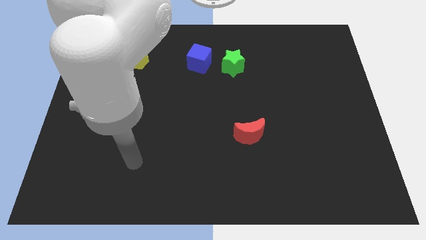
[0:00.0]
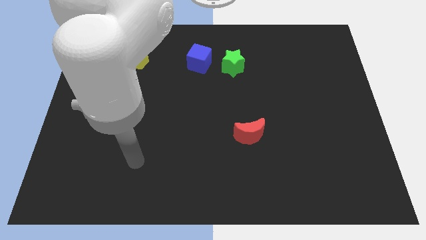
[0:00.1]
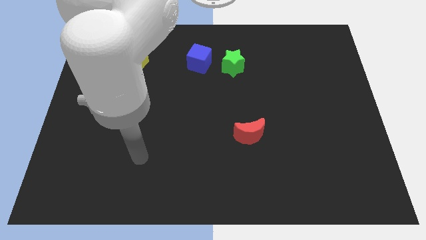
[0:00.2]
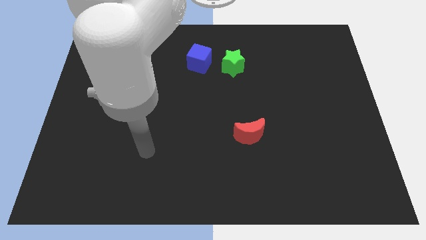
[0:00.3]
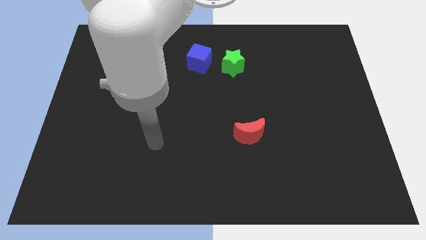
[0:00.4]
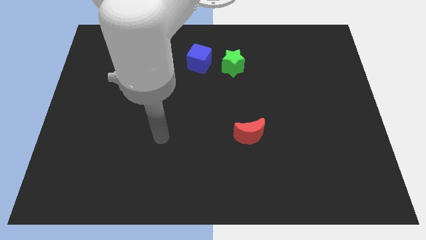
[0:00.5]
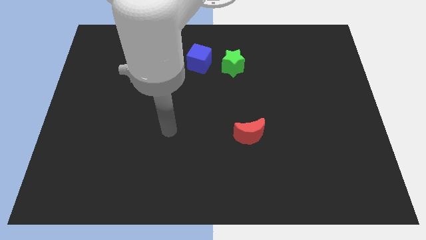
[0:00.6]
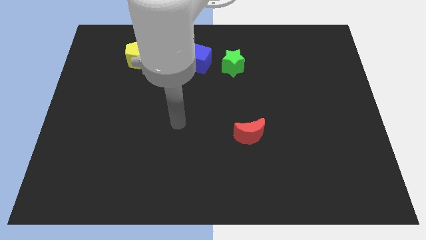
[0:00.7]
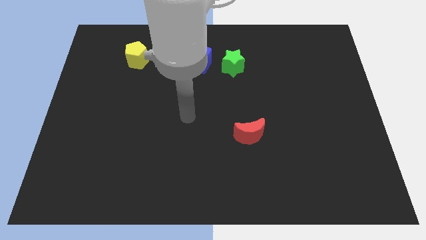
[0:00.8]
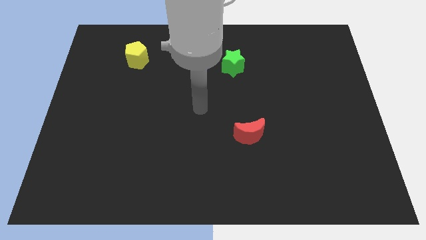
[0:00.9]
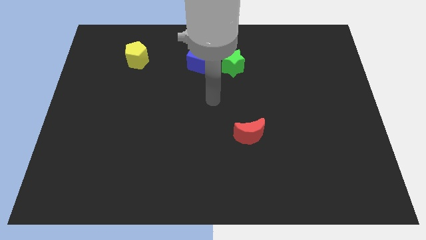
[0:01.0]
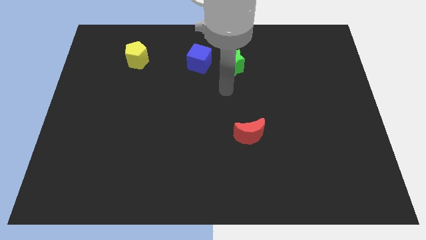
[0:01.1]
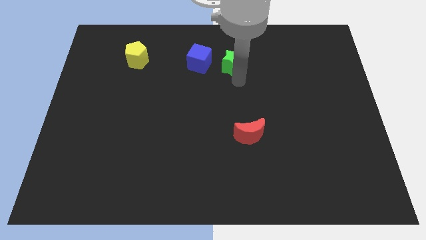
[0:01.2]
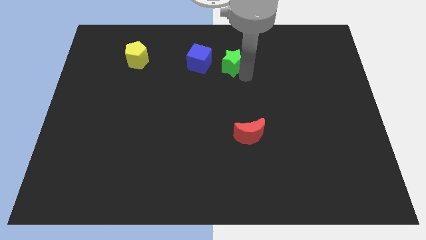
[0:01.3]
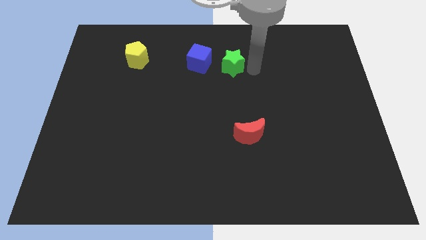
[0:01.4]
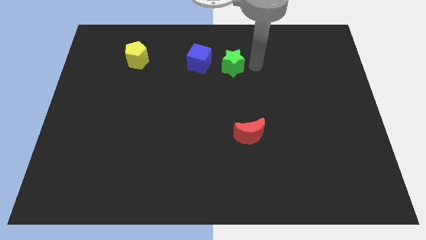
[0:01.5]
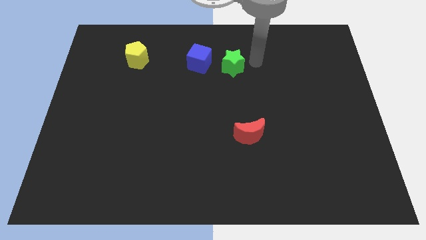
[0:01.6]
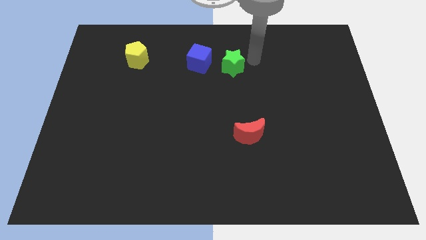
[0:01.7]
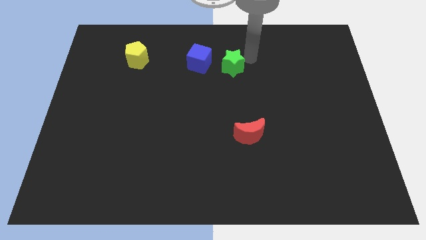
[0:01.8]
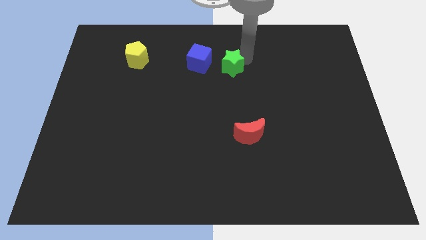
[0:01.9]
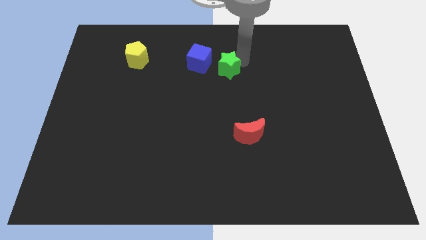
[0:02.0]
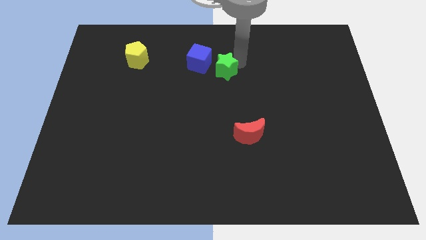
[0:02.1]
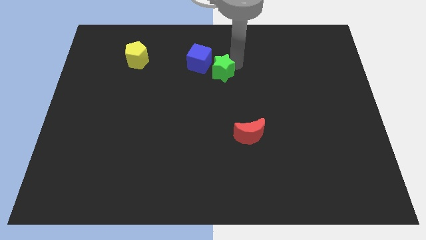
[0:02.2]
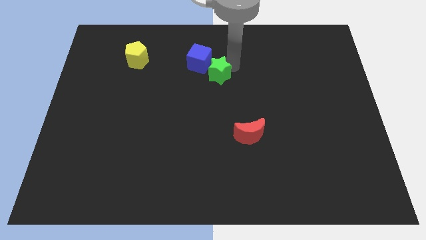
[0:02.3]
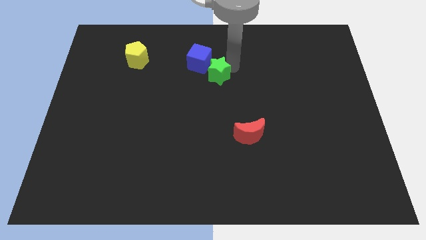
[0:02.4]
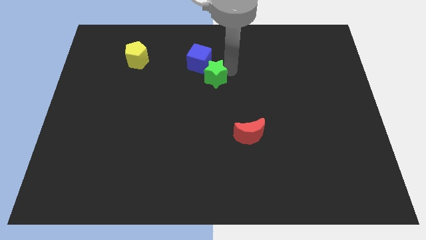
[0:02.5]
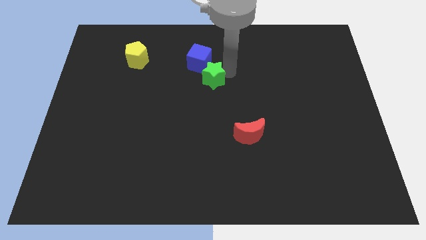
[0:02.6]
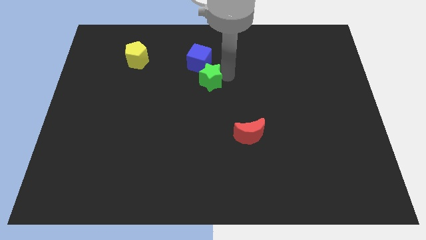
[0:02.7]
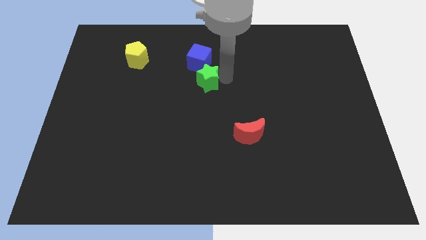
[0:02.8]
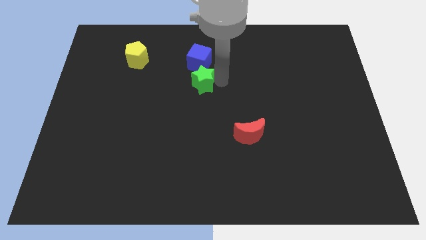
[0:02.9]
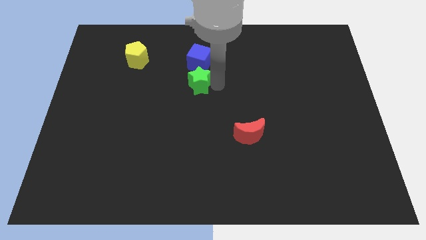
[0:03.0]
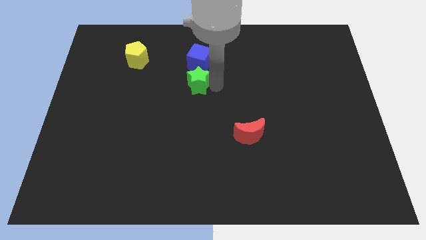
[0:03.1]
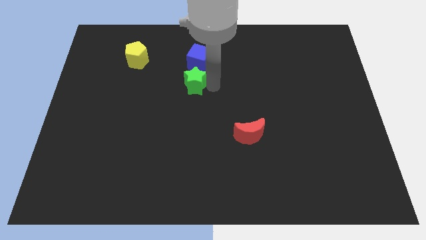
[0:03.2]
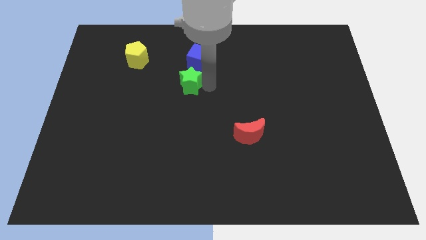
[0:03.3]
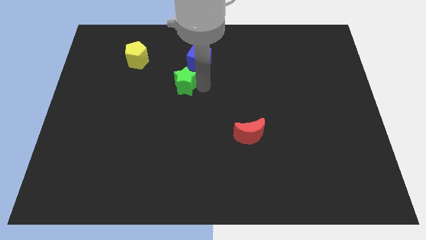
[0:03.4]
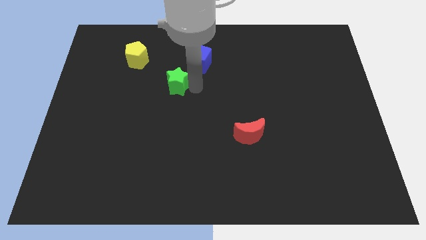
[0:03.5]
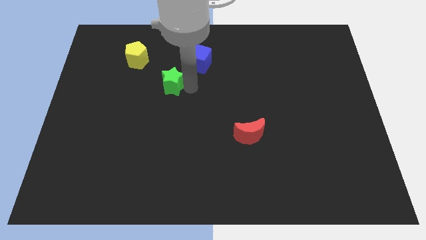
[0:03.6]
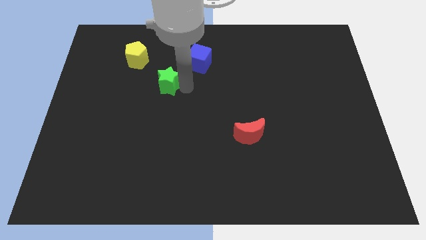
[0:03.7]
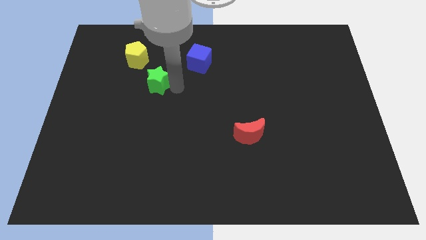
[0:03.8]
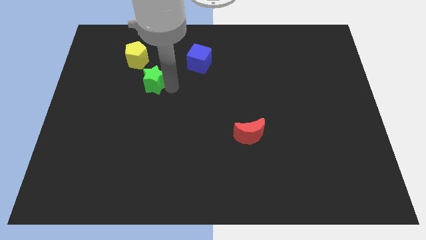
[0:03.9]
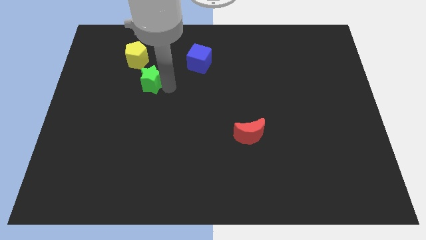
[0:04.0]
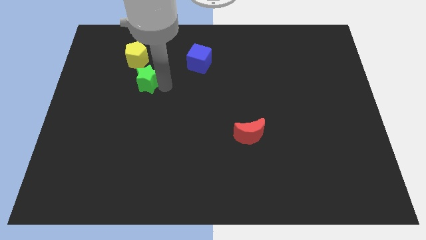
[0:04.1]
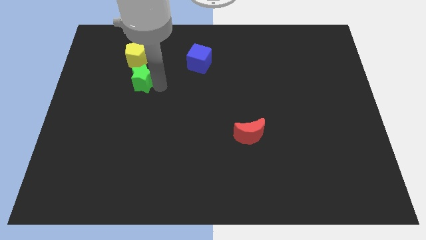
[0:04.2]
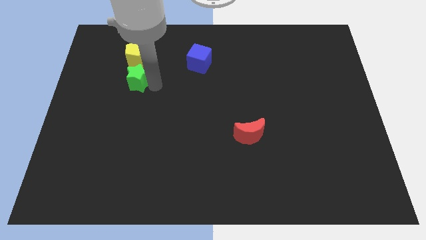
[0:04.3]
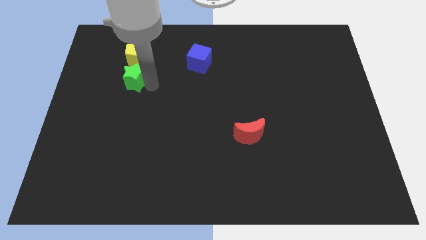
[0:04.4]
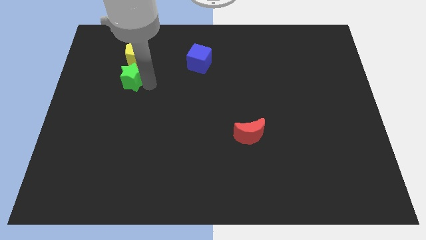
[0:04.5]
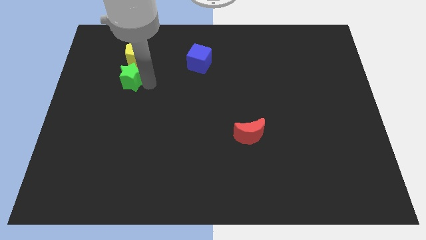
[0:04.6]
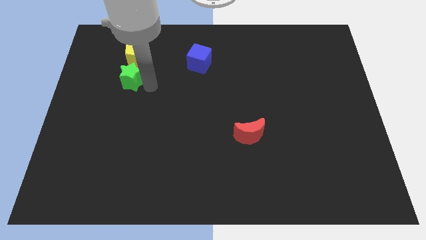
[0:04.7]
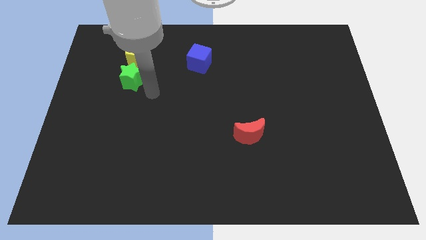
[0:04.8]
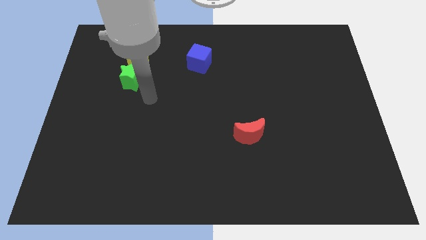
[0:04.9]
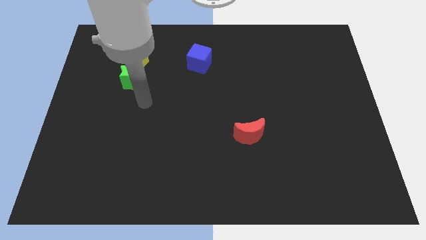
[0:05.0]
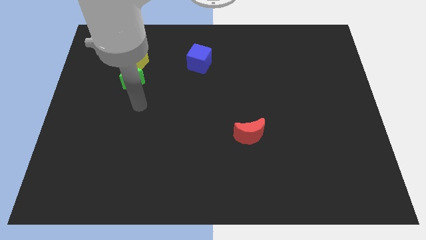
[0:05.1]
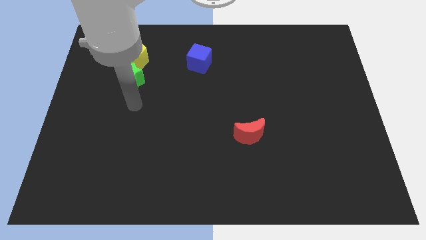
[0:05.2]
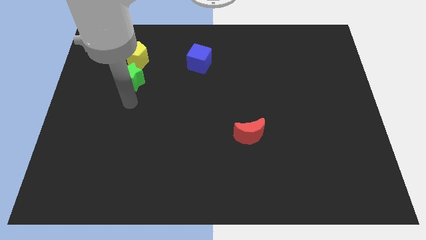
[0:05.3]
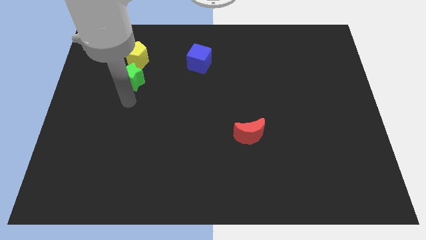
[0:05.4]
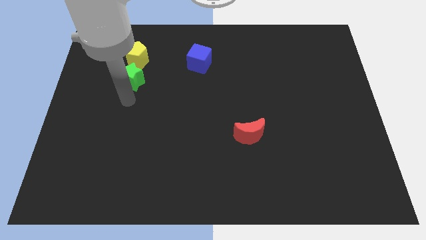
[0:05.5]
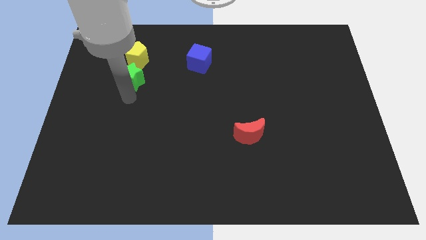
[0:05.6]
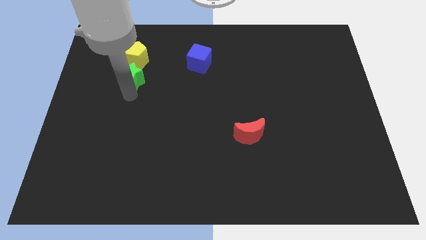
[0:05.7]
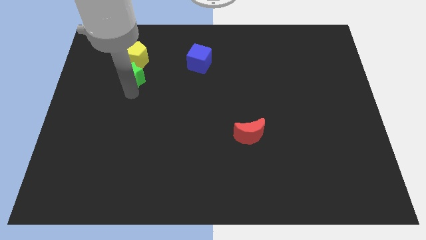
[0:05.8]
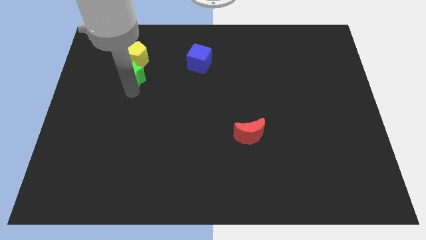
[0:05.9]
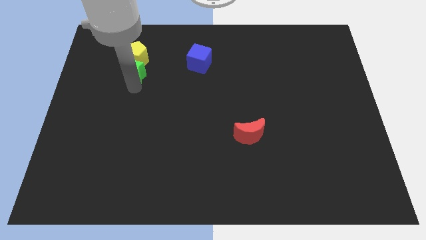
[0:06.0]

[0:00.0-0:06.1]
push the green block close to the yellow pentagon

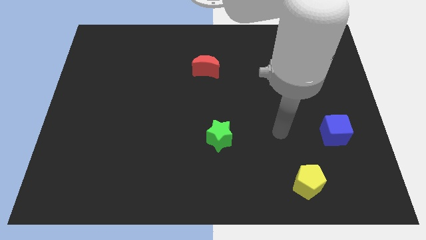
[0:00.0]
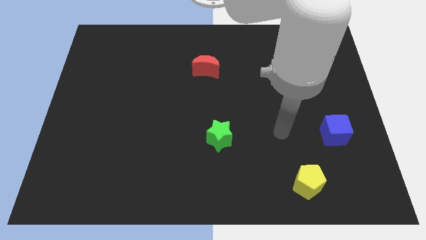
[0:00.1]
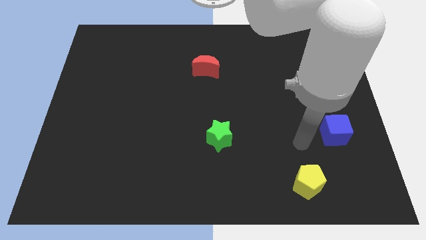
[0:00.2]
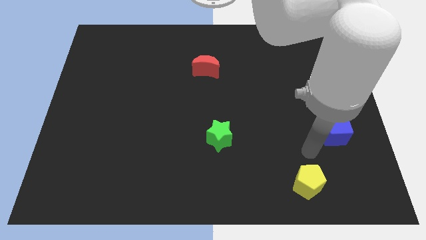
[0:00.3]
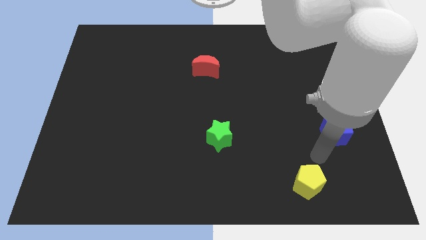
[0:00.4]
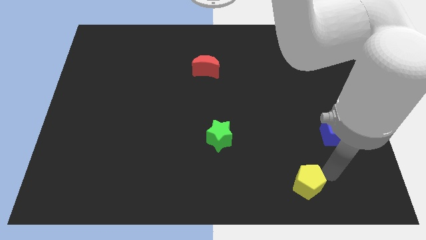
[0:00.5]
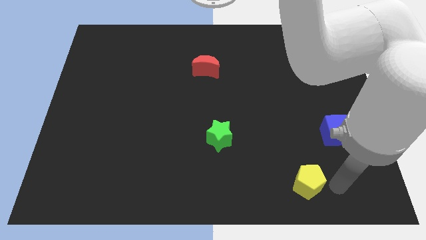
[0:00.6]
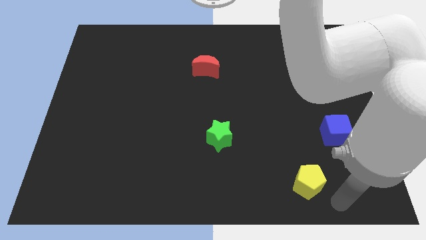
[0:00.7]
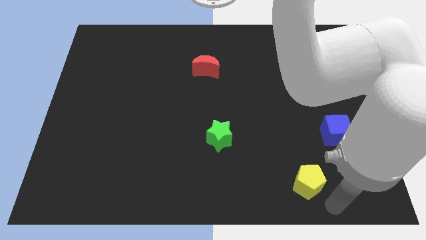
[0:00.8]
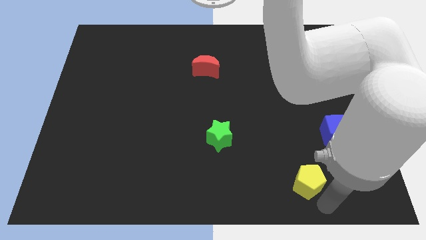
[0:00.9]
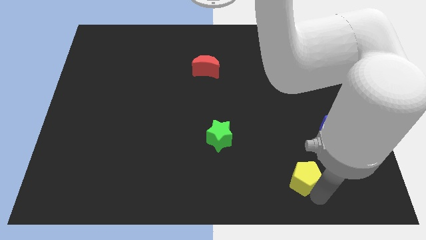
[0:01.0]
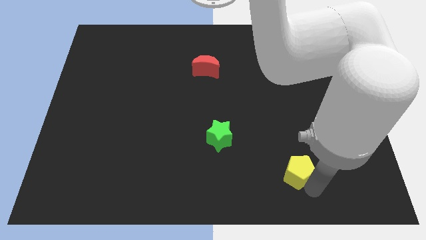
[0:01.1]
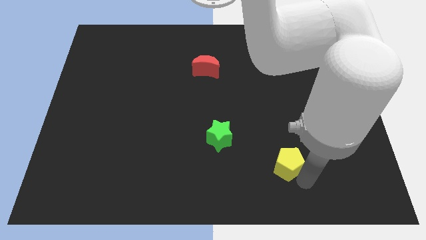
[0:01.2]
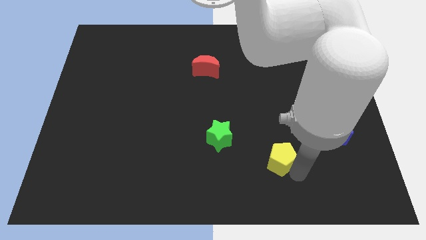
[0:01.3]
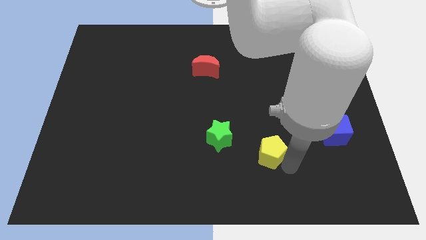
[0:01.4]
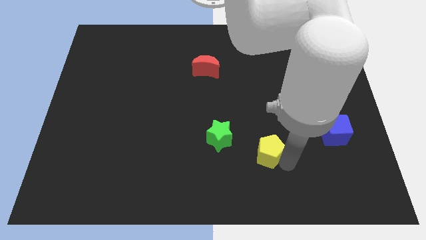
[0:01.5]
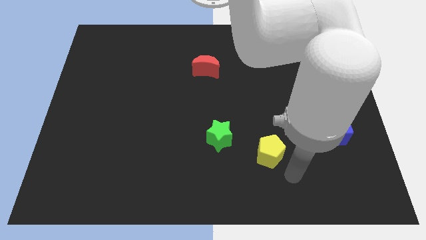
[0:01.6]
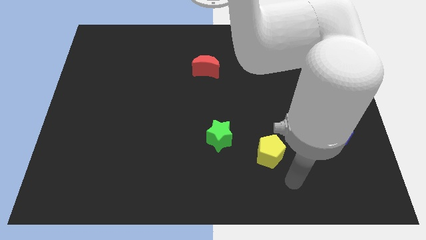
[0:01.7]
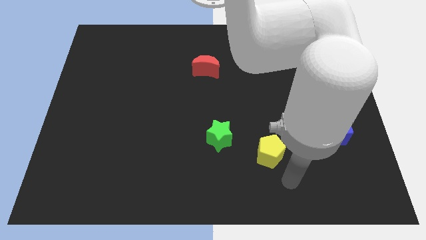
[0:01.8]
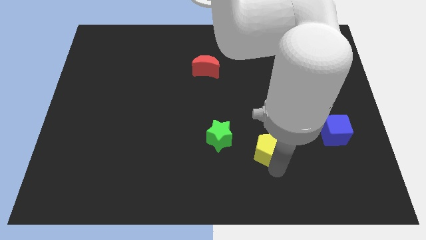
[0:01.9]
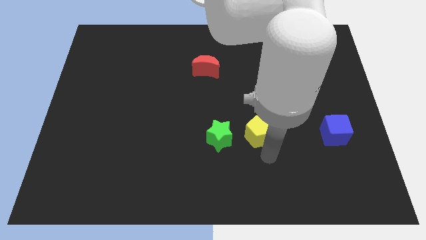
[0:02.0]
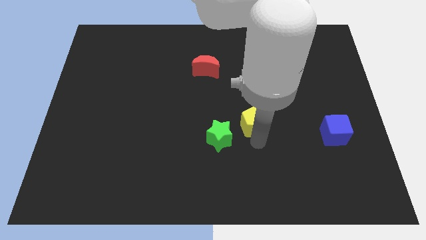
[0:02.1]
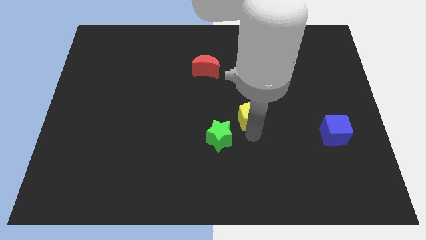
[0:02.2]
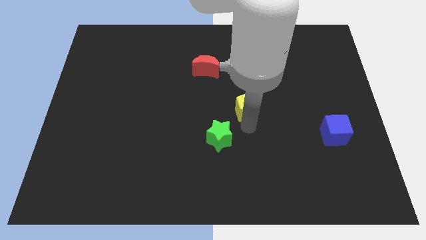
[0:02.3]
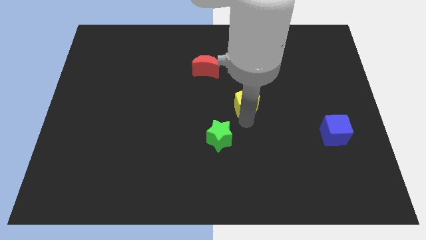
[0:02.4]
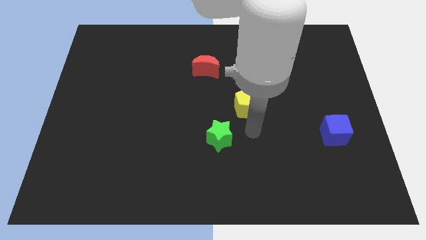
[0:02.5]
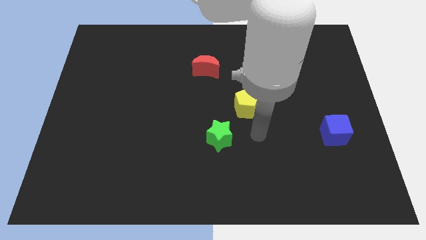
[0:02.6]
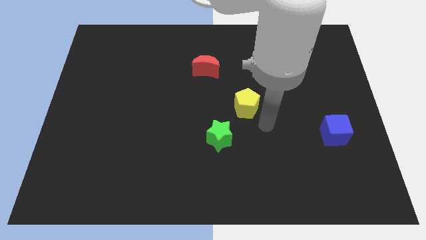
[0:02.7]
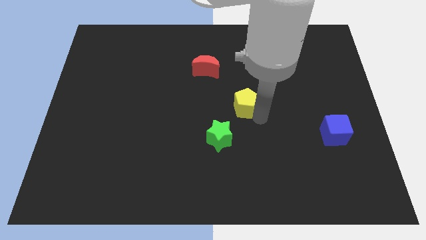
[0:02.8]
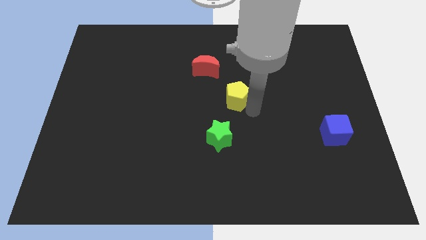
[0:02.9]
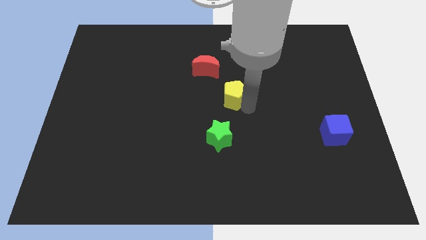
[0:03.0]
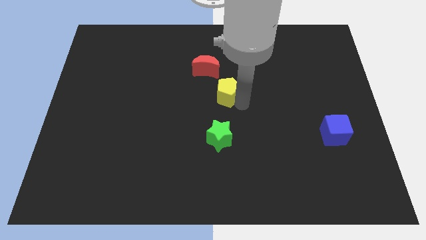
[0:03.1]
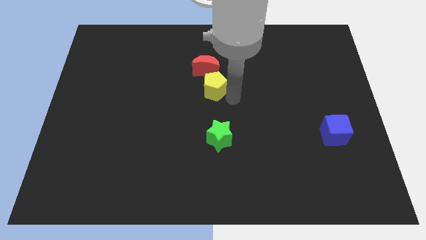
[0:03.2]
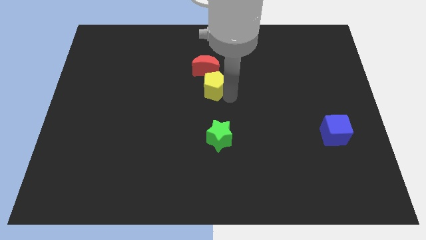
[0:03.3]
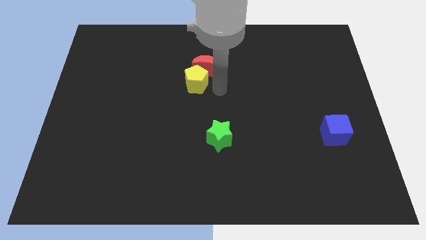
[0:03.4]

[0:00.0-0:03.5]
slide the yellow pentagon towards the moon
